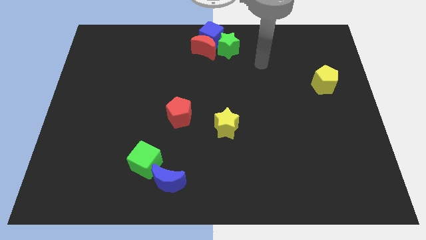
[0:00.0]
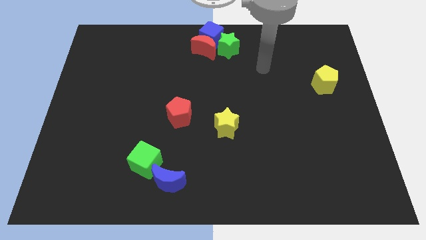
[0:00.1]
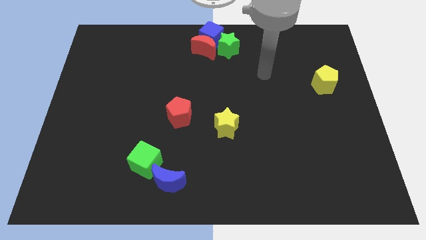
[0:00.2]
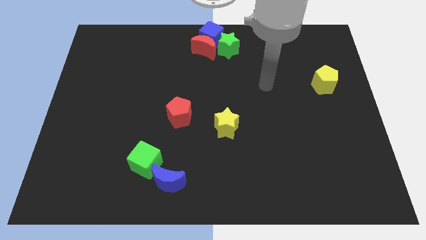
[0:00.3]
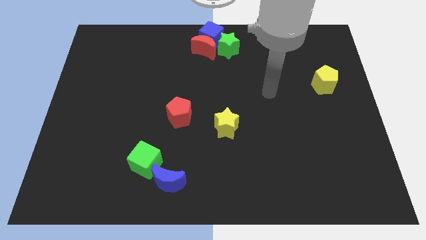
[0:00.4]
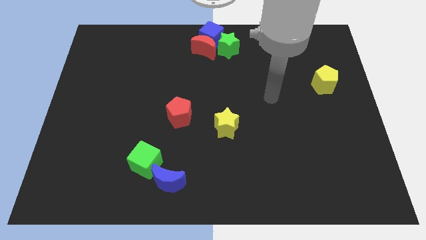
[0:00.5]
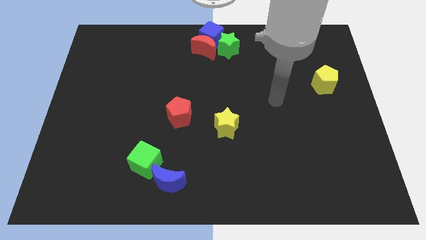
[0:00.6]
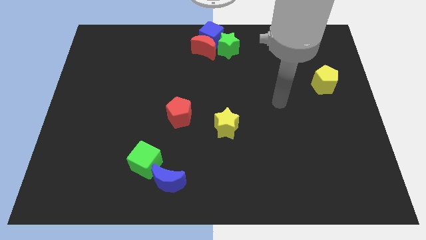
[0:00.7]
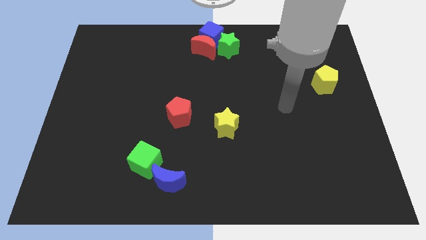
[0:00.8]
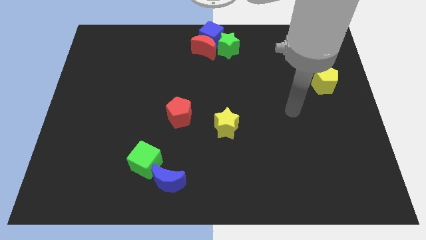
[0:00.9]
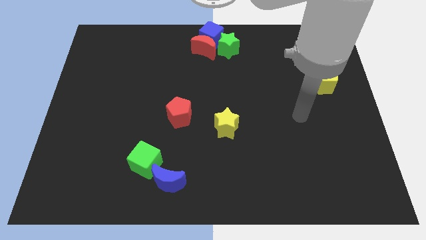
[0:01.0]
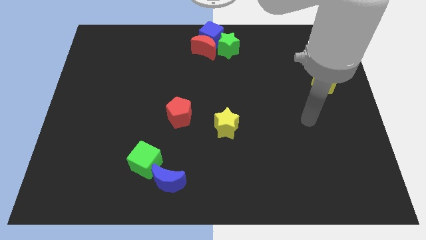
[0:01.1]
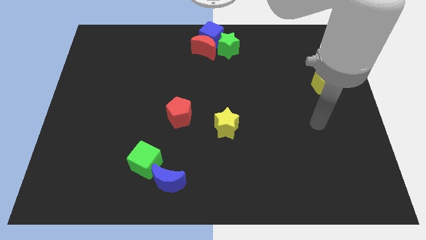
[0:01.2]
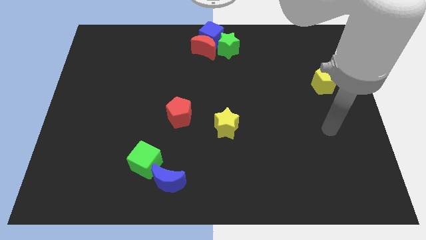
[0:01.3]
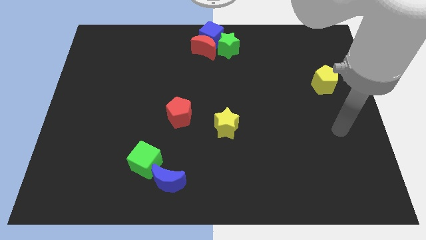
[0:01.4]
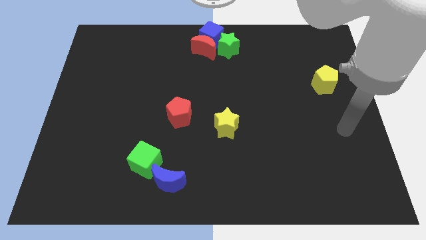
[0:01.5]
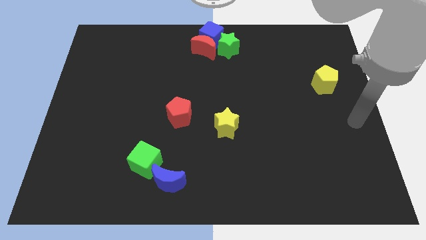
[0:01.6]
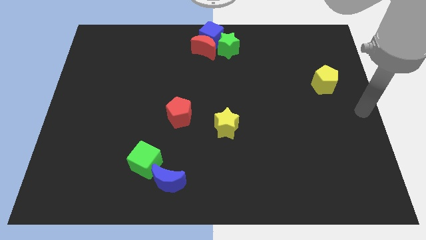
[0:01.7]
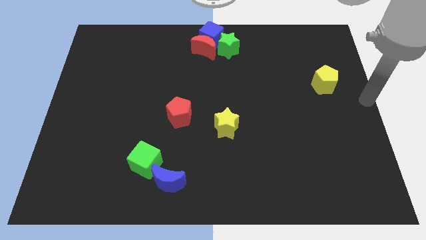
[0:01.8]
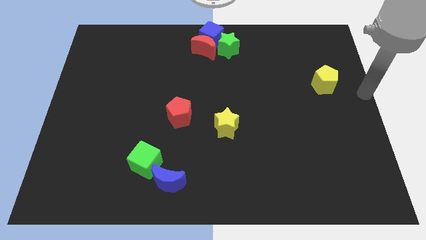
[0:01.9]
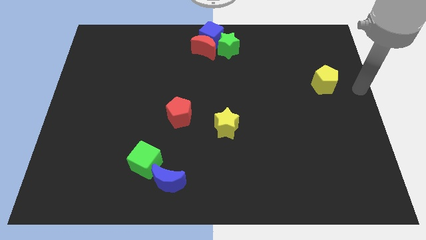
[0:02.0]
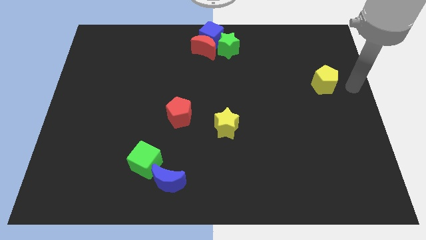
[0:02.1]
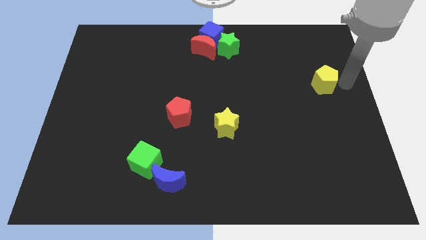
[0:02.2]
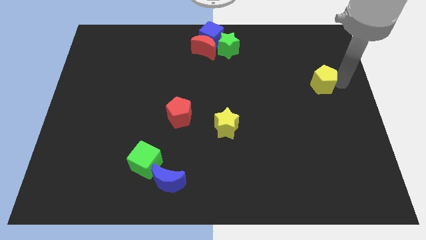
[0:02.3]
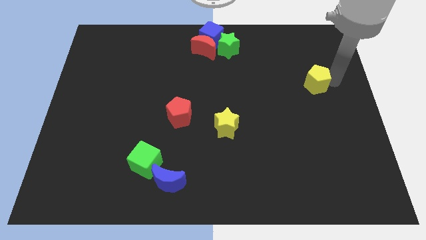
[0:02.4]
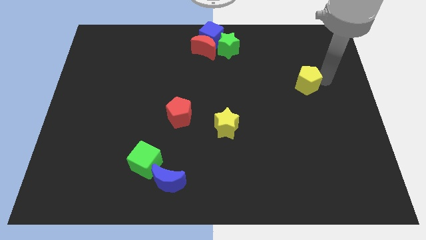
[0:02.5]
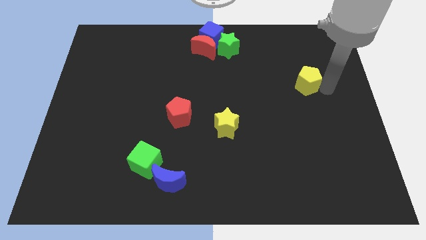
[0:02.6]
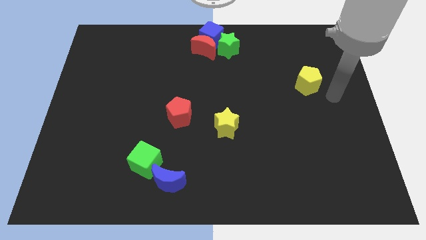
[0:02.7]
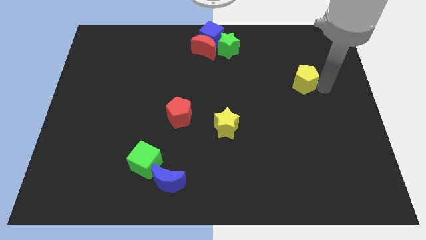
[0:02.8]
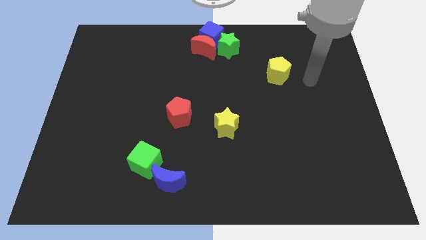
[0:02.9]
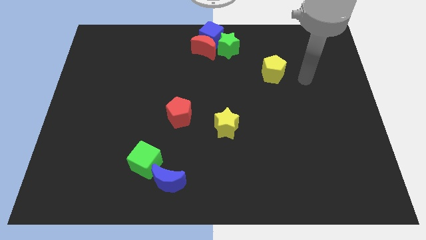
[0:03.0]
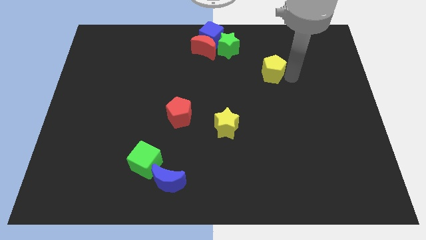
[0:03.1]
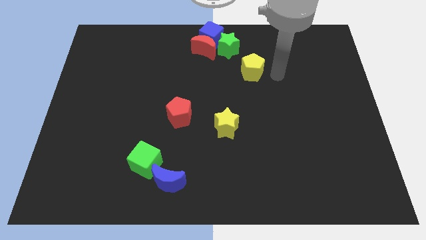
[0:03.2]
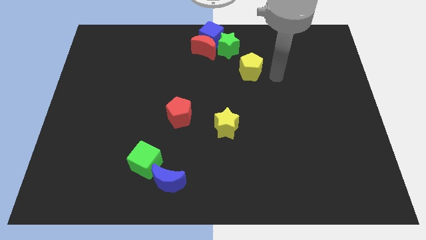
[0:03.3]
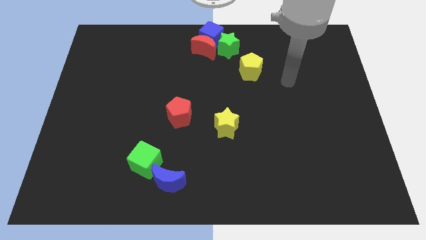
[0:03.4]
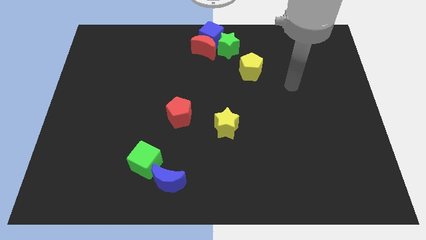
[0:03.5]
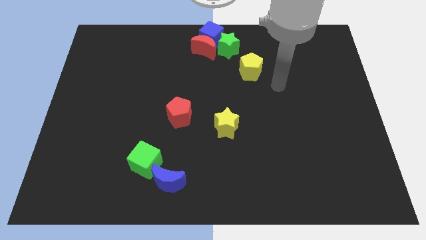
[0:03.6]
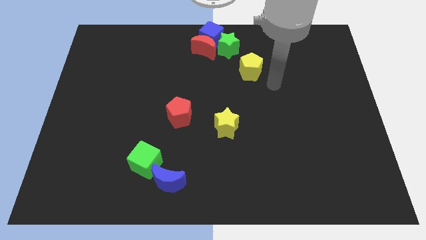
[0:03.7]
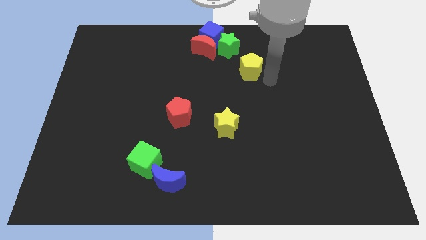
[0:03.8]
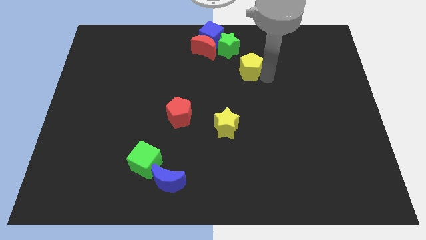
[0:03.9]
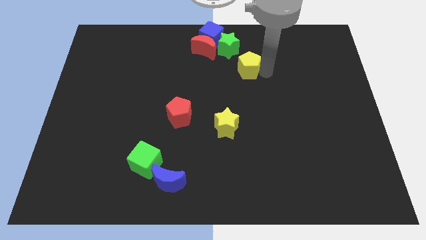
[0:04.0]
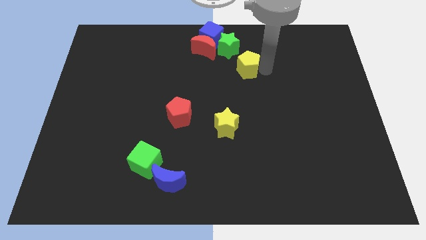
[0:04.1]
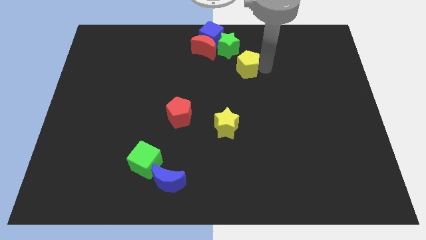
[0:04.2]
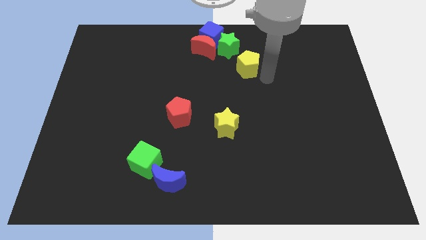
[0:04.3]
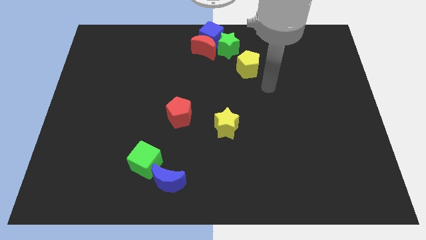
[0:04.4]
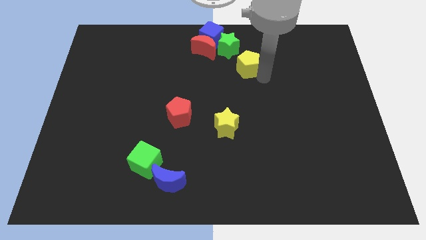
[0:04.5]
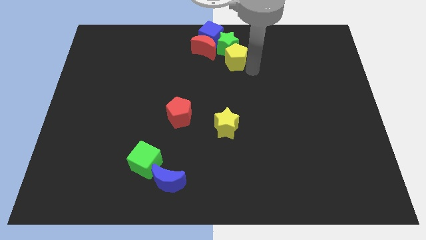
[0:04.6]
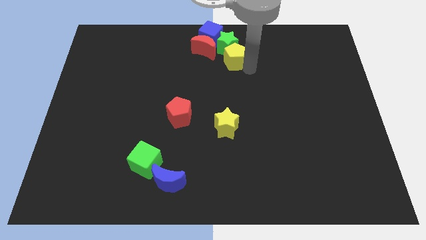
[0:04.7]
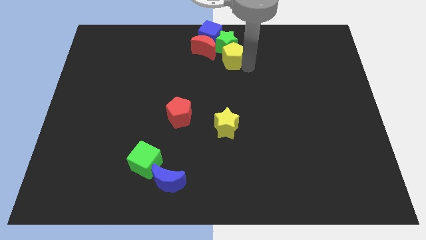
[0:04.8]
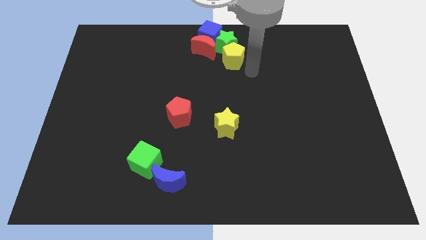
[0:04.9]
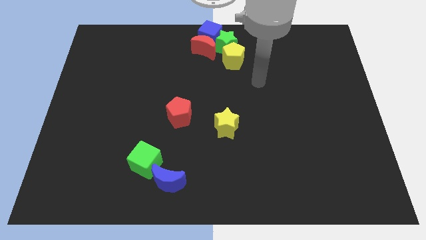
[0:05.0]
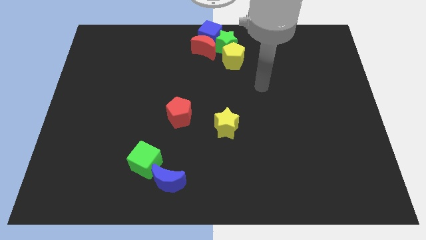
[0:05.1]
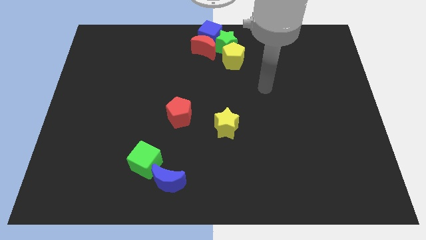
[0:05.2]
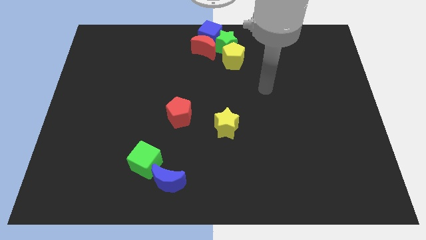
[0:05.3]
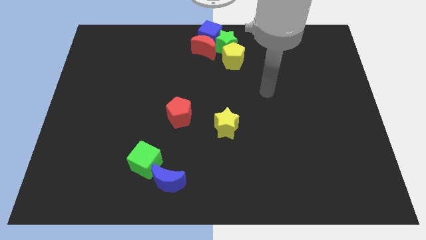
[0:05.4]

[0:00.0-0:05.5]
push the yellow pentagon into green star

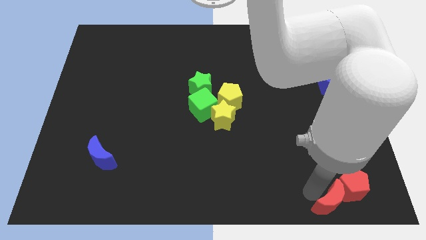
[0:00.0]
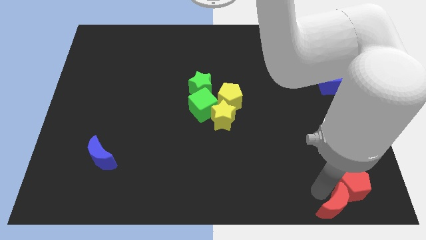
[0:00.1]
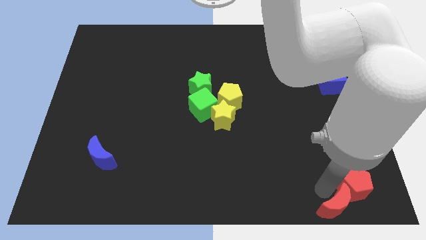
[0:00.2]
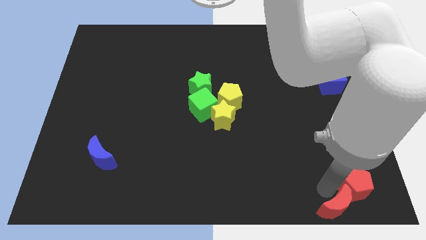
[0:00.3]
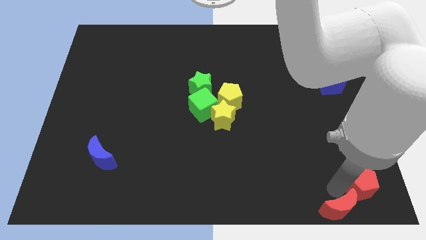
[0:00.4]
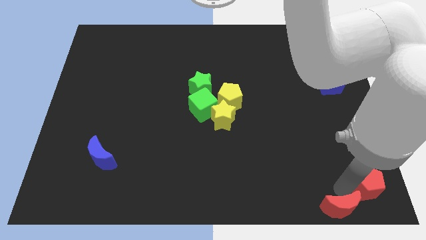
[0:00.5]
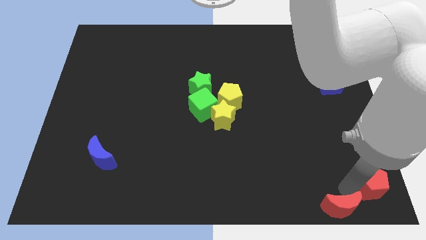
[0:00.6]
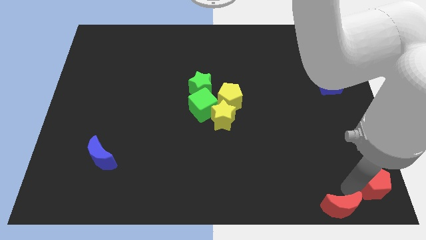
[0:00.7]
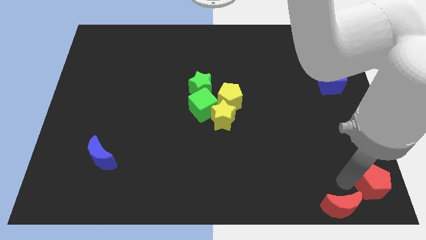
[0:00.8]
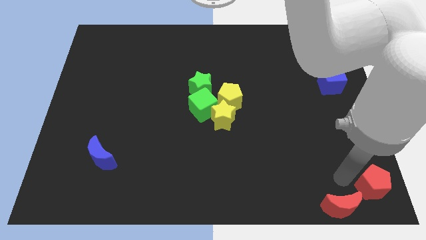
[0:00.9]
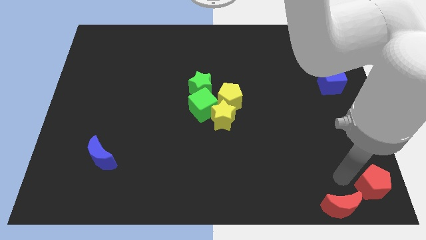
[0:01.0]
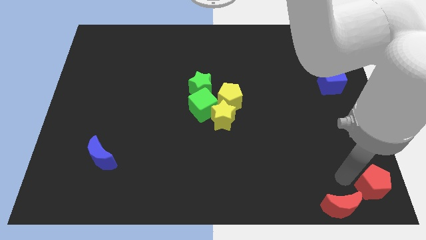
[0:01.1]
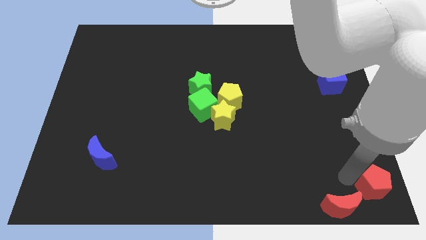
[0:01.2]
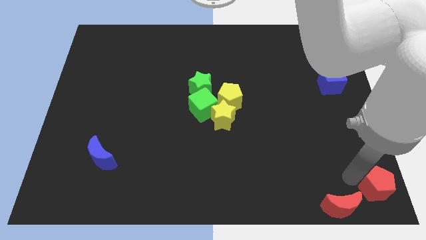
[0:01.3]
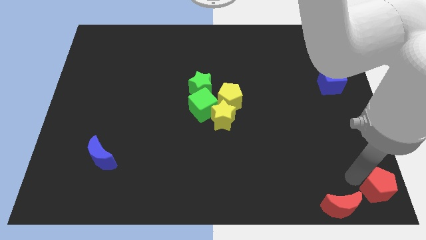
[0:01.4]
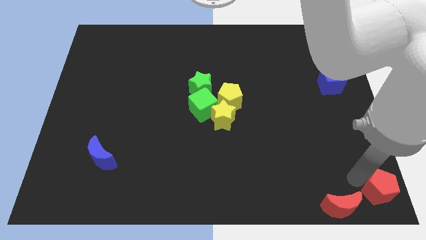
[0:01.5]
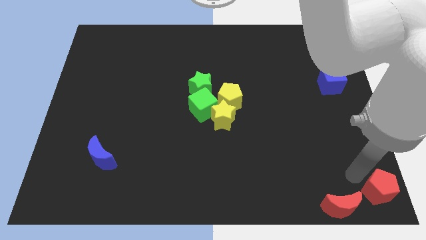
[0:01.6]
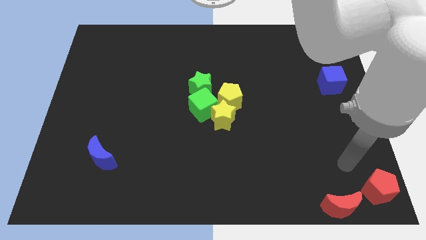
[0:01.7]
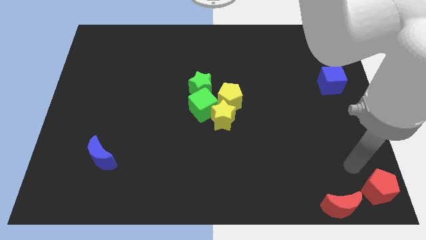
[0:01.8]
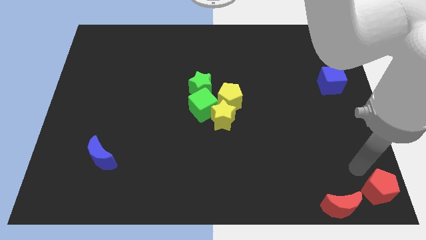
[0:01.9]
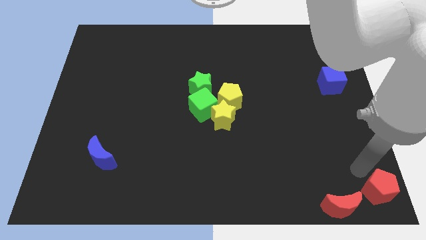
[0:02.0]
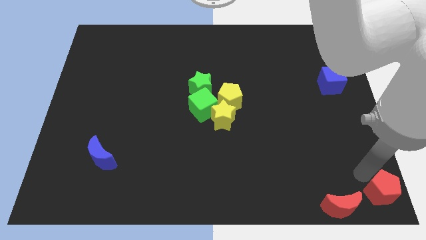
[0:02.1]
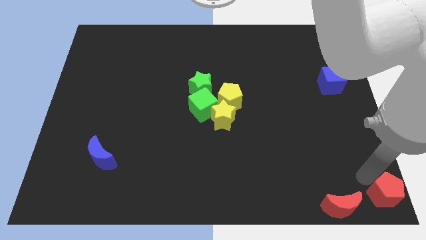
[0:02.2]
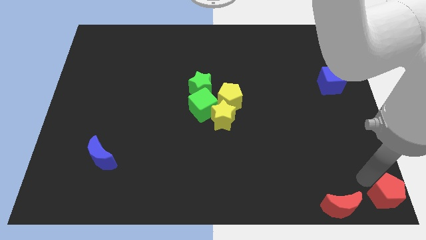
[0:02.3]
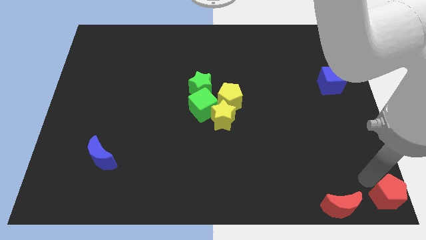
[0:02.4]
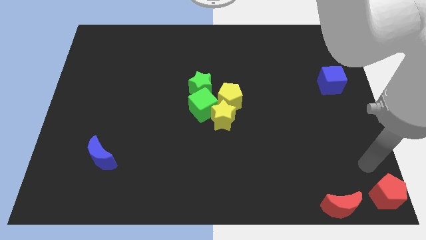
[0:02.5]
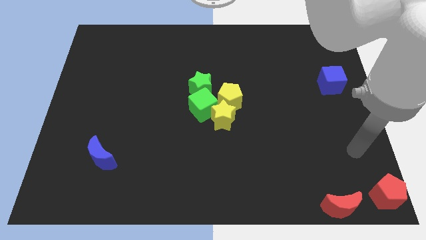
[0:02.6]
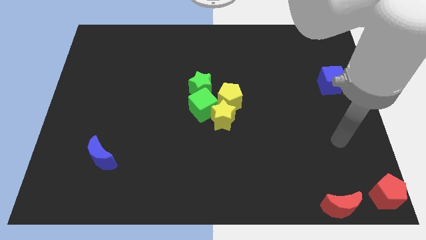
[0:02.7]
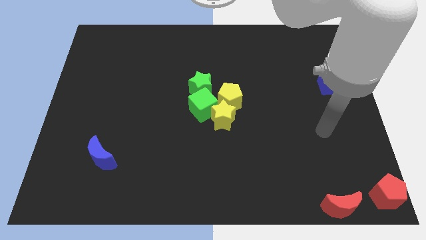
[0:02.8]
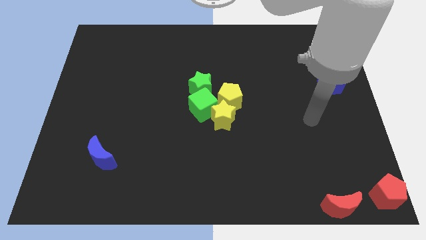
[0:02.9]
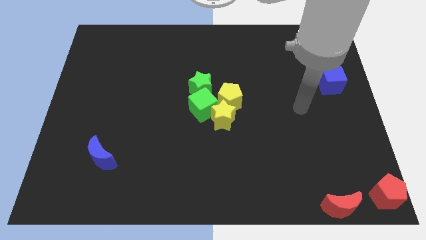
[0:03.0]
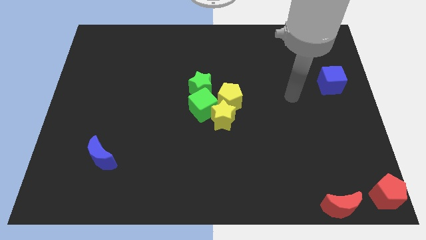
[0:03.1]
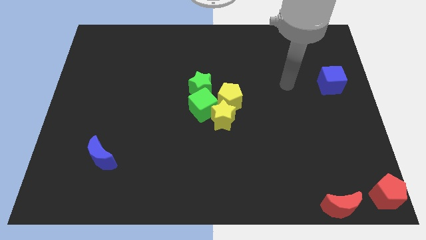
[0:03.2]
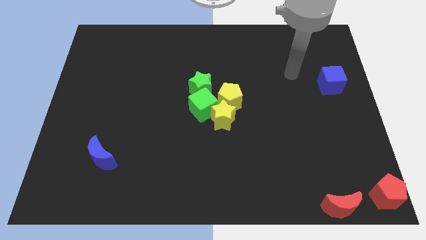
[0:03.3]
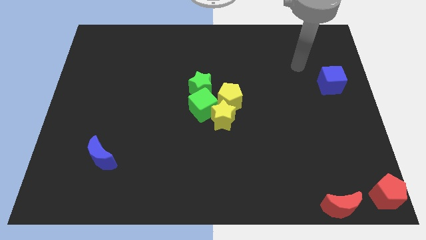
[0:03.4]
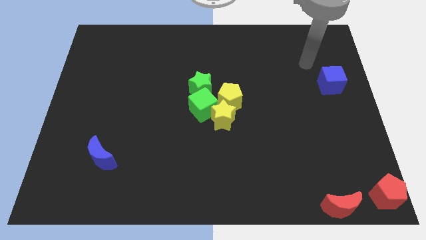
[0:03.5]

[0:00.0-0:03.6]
place the red pentagon towards the bottom right corner of the board
